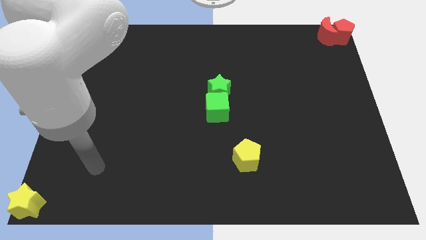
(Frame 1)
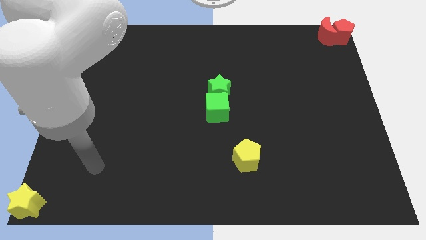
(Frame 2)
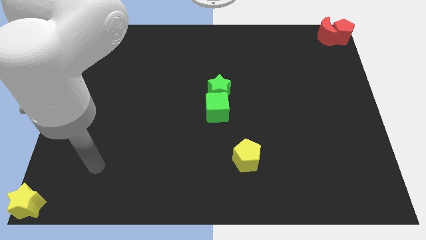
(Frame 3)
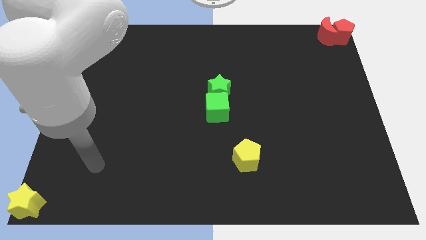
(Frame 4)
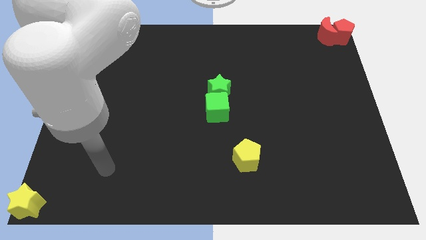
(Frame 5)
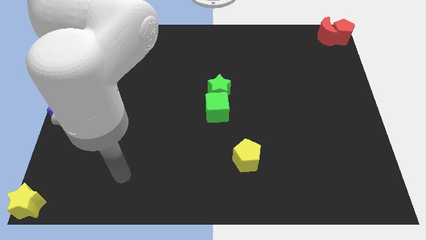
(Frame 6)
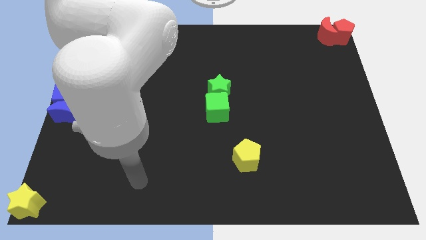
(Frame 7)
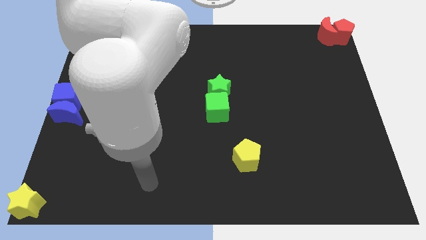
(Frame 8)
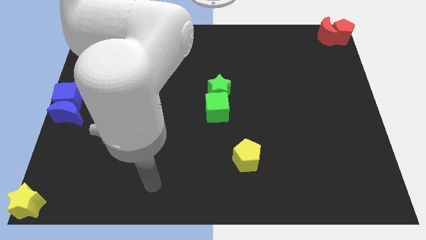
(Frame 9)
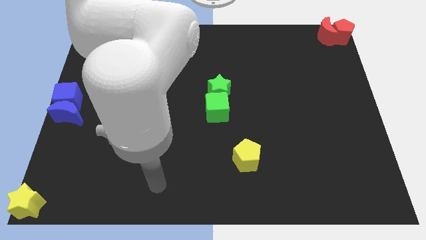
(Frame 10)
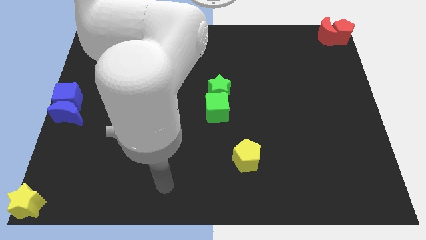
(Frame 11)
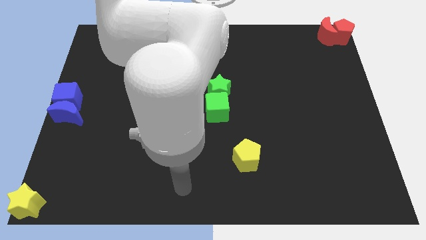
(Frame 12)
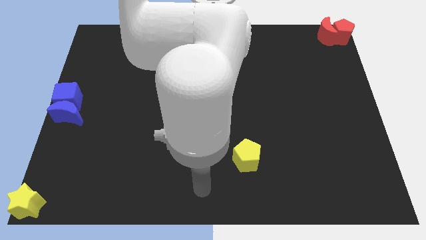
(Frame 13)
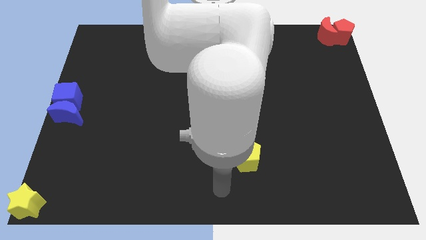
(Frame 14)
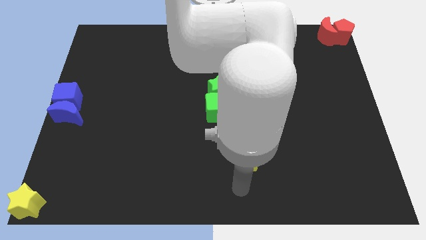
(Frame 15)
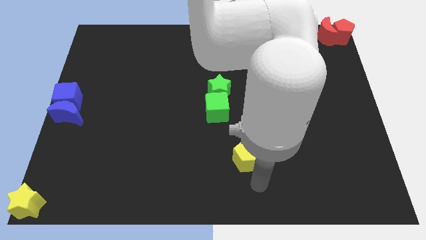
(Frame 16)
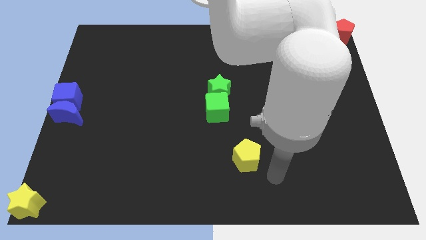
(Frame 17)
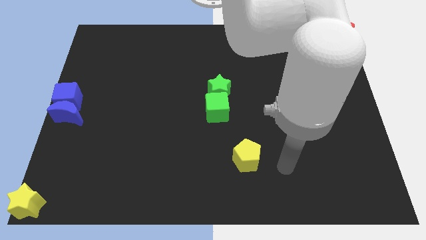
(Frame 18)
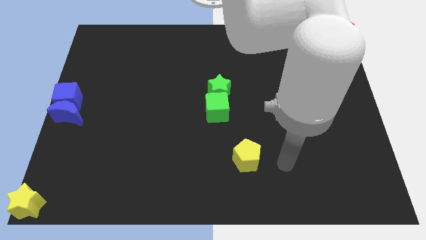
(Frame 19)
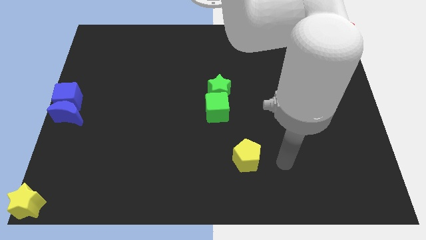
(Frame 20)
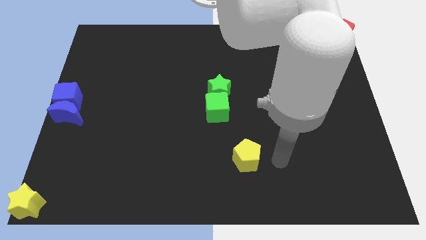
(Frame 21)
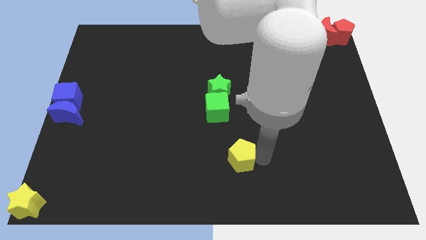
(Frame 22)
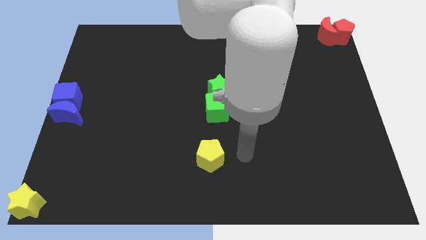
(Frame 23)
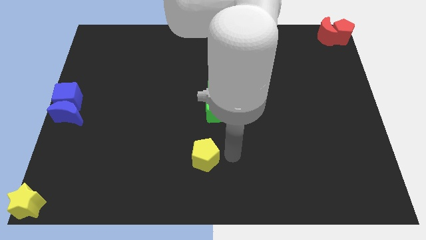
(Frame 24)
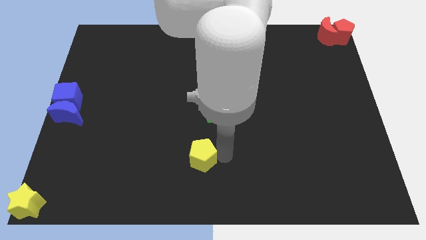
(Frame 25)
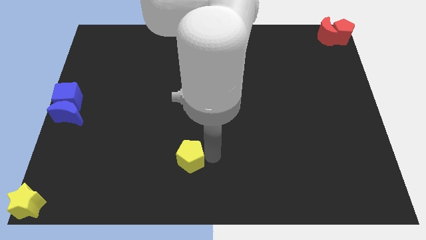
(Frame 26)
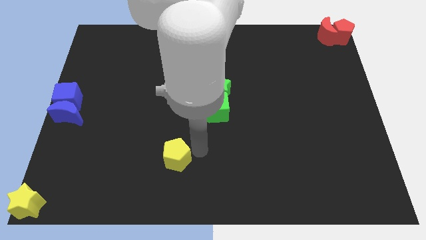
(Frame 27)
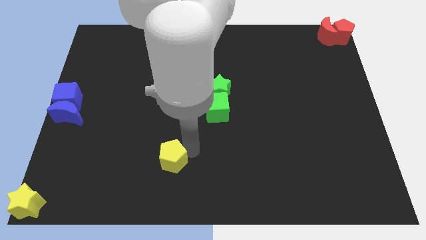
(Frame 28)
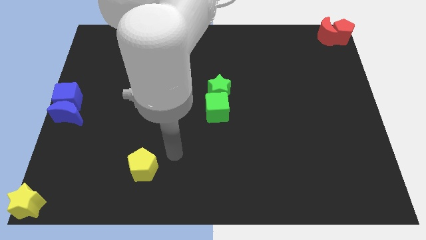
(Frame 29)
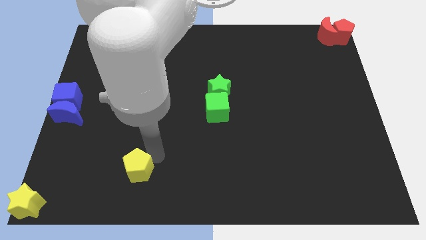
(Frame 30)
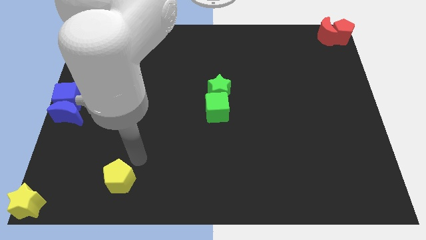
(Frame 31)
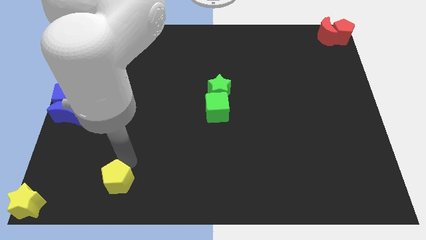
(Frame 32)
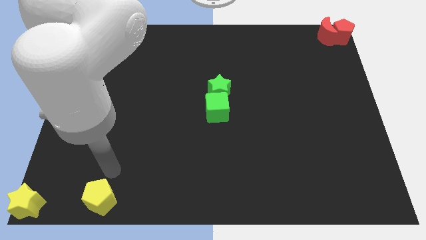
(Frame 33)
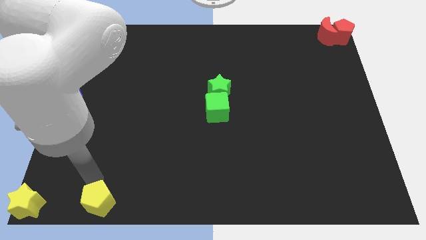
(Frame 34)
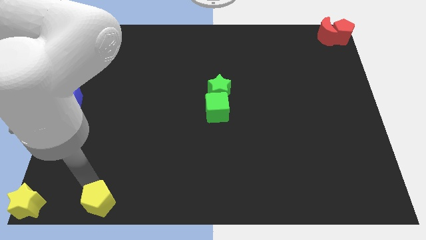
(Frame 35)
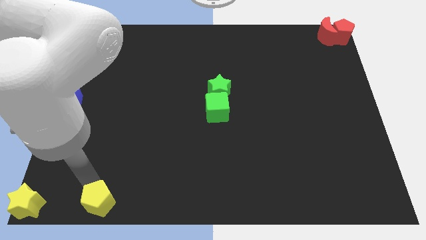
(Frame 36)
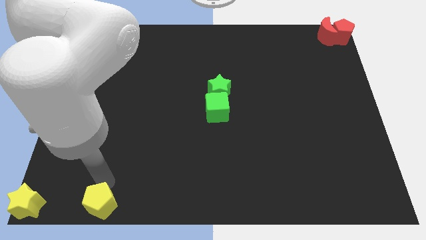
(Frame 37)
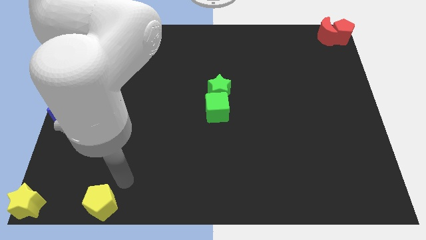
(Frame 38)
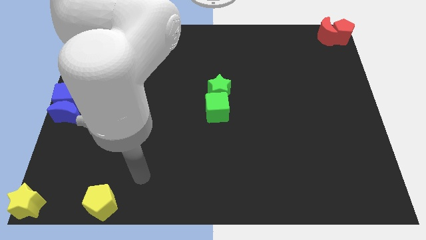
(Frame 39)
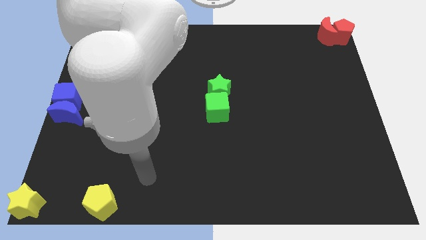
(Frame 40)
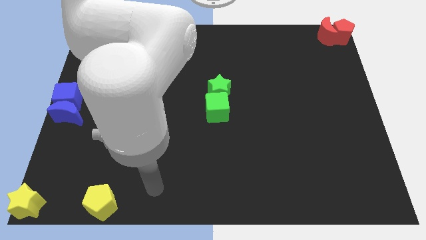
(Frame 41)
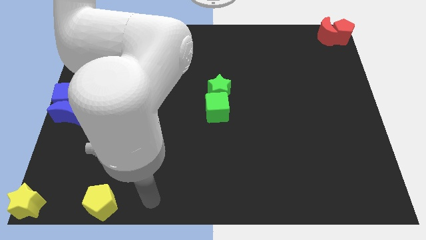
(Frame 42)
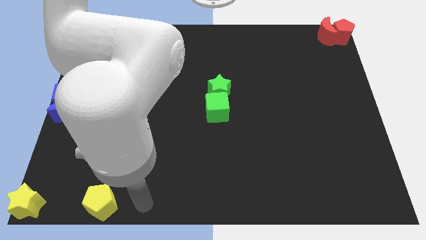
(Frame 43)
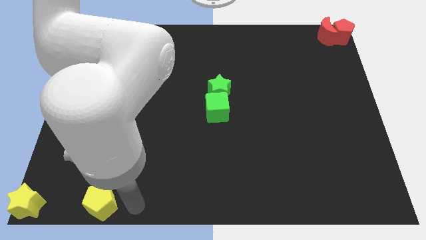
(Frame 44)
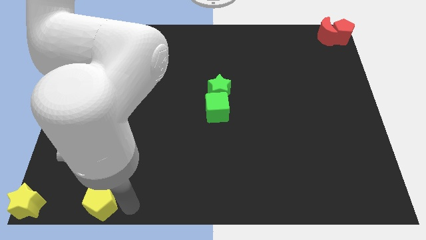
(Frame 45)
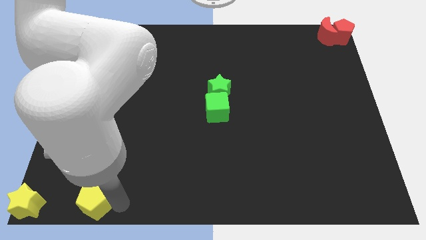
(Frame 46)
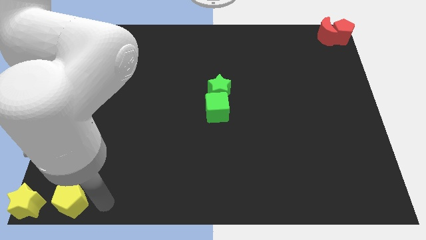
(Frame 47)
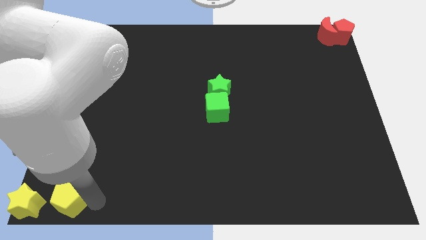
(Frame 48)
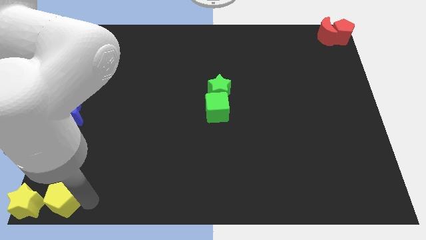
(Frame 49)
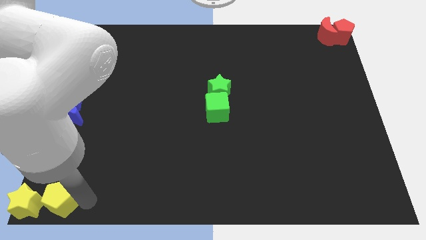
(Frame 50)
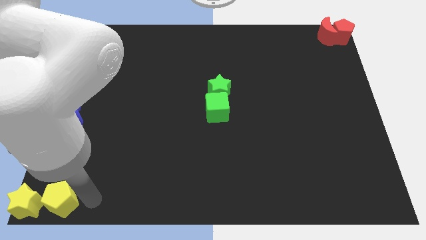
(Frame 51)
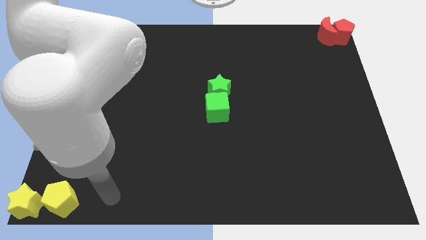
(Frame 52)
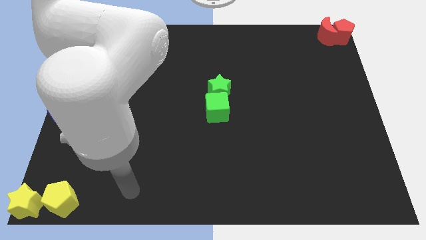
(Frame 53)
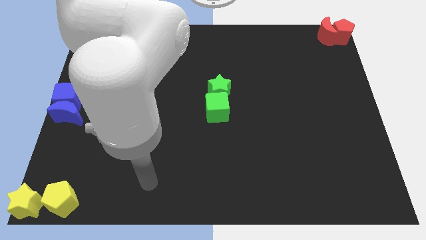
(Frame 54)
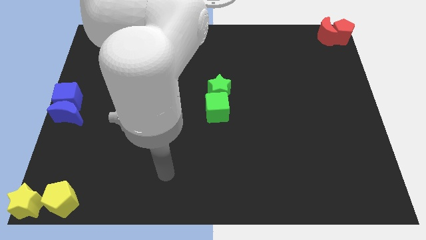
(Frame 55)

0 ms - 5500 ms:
move the yellow pentagon towards the yellow star

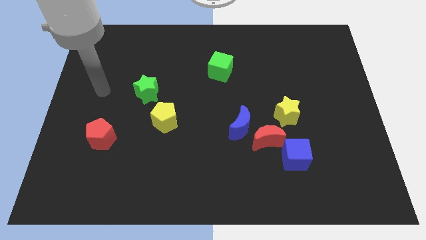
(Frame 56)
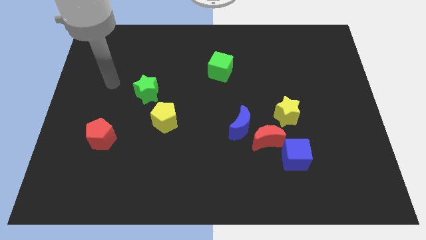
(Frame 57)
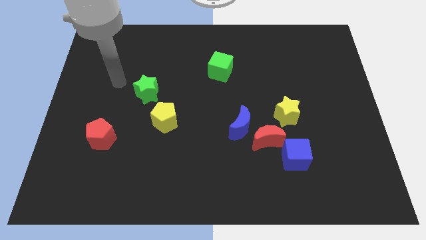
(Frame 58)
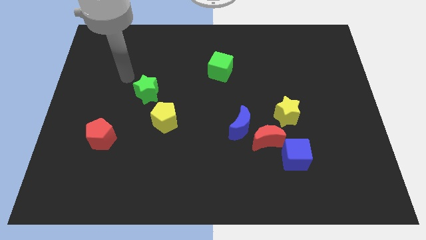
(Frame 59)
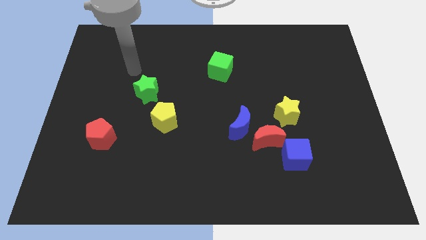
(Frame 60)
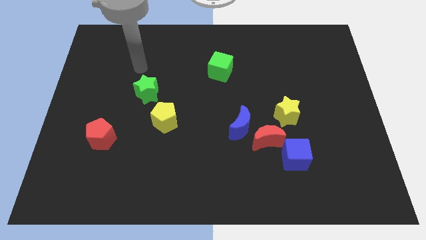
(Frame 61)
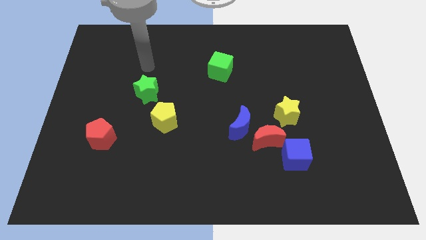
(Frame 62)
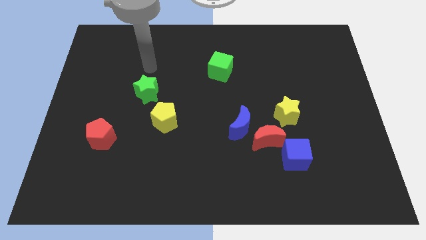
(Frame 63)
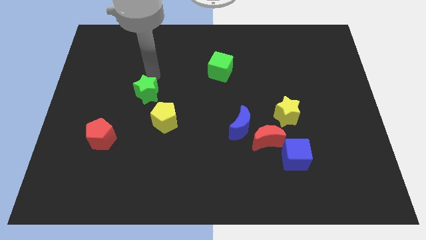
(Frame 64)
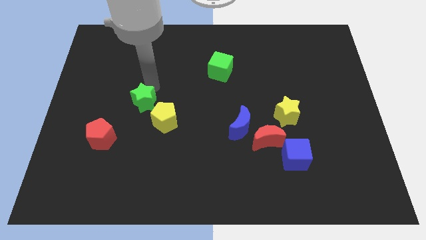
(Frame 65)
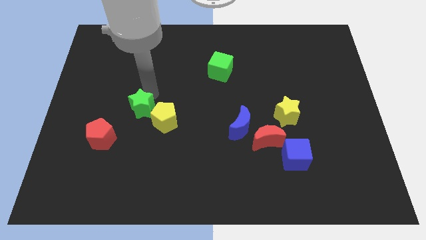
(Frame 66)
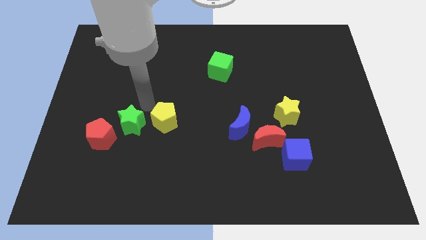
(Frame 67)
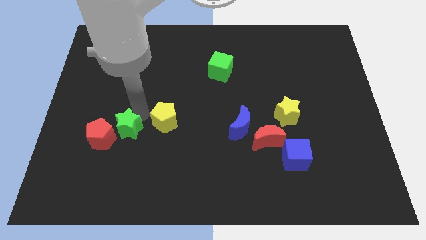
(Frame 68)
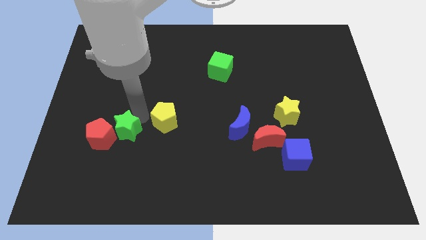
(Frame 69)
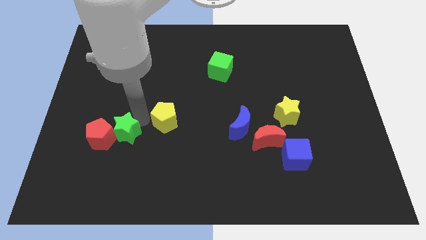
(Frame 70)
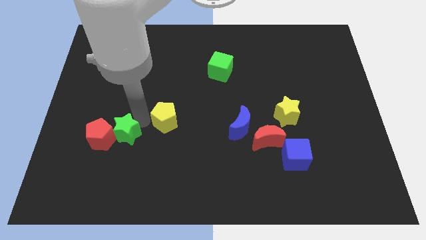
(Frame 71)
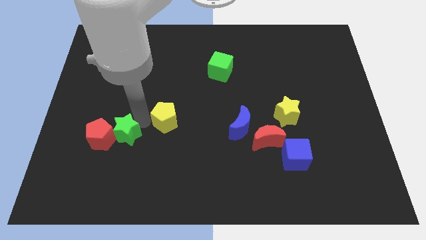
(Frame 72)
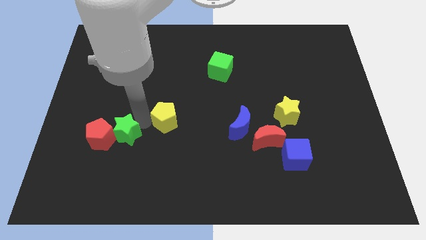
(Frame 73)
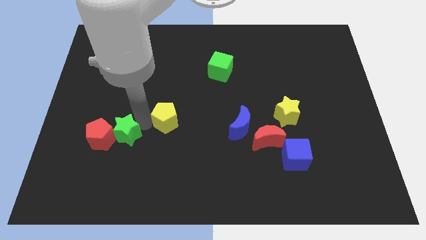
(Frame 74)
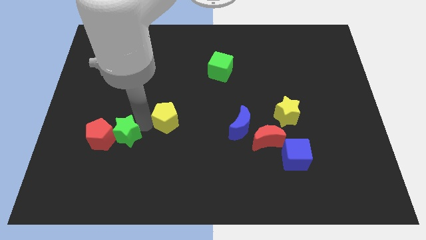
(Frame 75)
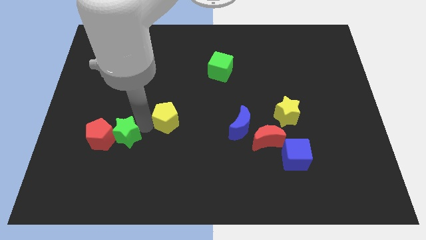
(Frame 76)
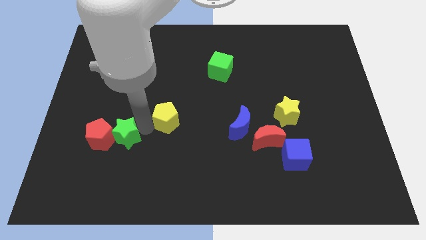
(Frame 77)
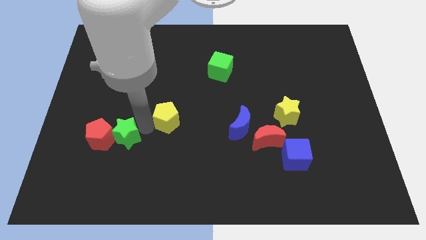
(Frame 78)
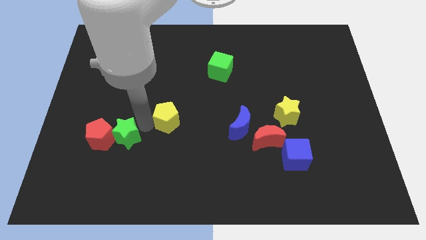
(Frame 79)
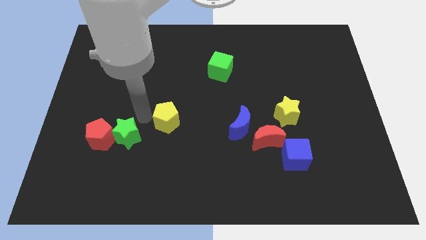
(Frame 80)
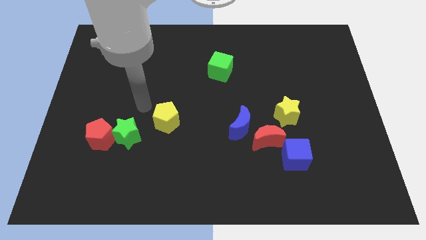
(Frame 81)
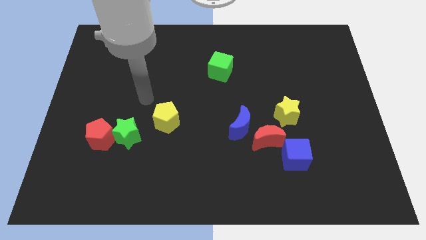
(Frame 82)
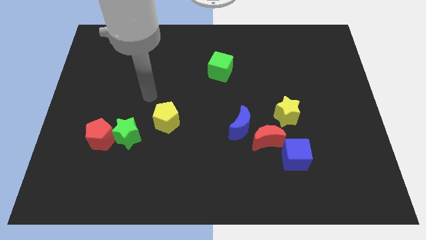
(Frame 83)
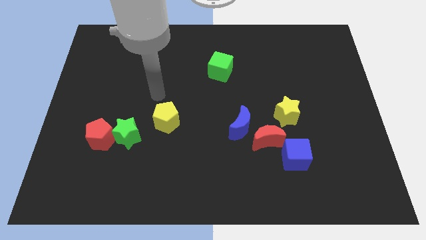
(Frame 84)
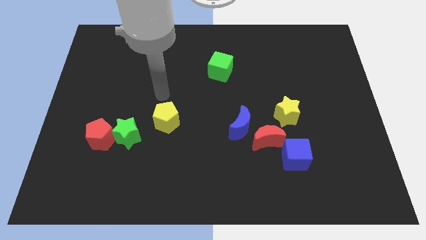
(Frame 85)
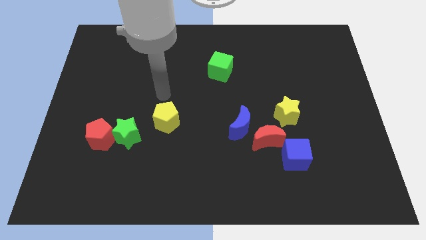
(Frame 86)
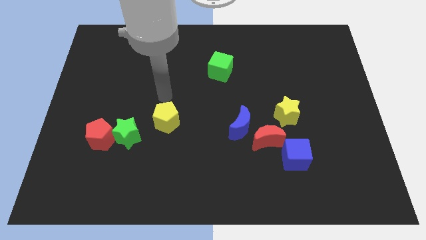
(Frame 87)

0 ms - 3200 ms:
put the green star in between the red pentagon and yellow pentagon

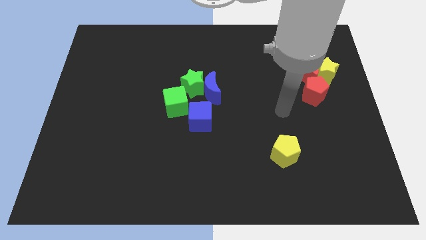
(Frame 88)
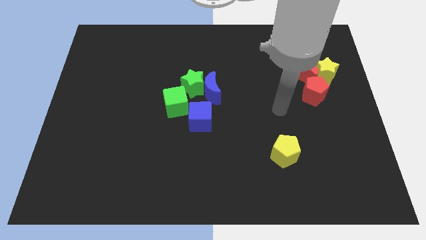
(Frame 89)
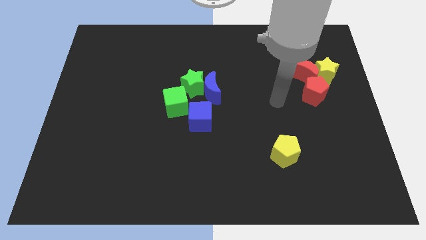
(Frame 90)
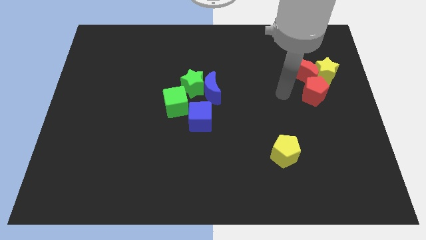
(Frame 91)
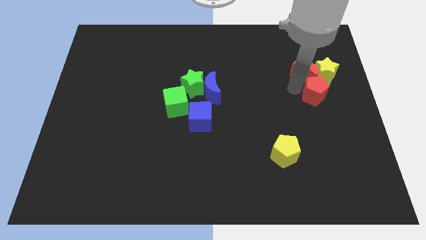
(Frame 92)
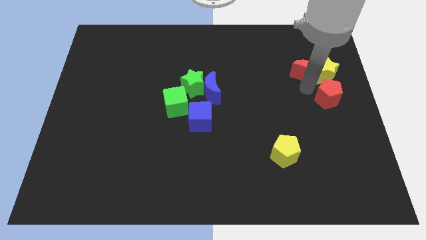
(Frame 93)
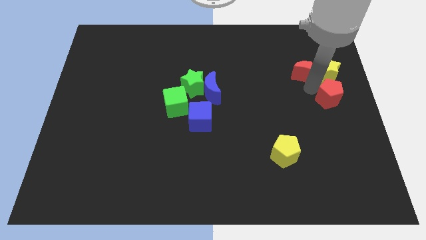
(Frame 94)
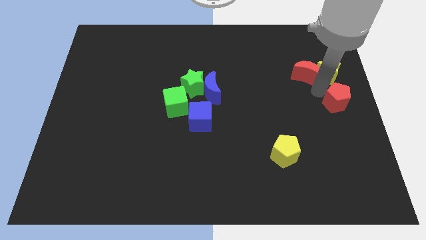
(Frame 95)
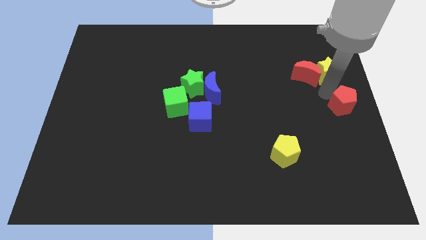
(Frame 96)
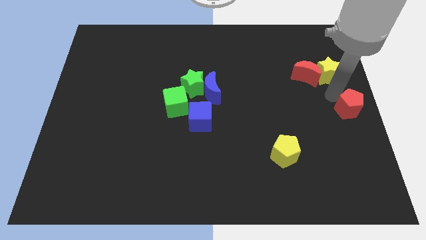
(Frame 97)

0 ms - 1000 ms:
move red pentagon to the right middle of the board
